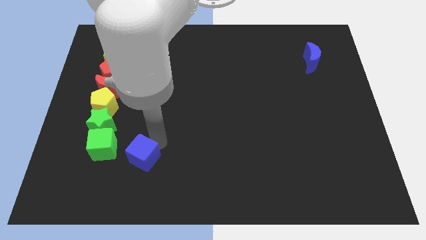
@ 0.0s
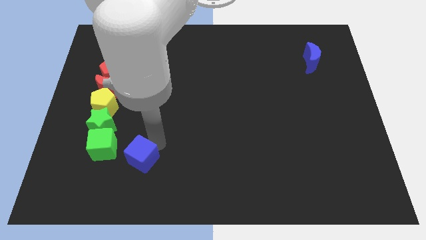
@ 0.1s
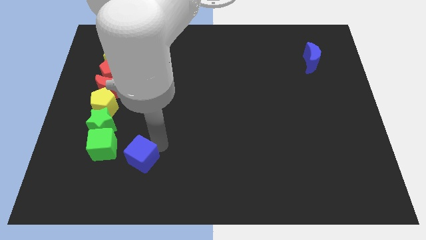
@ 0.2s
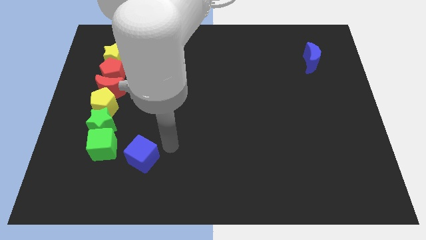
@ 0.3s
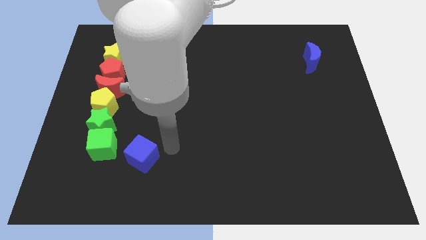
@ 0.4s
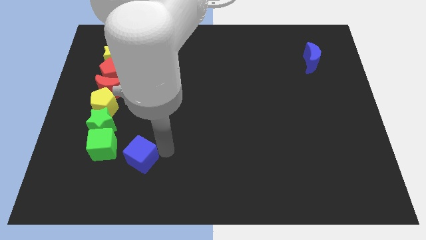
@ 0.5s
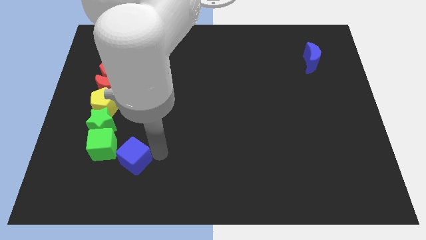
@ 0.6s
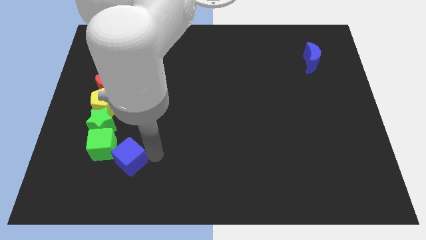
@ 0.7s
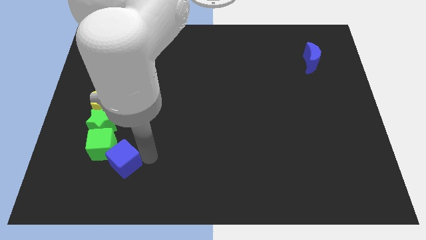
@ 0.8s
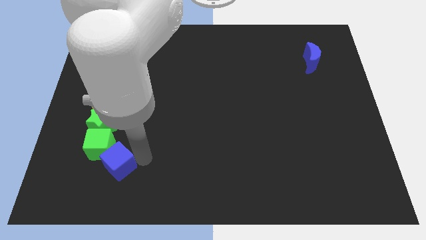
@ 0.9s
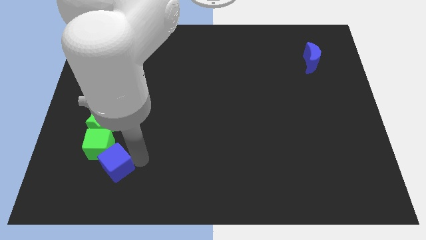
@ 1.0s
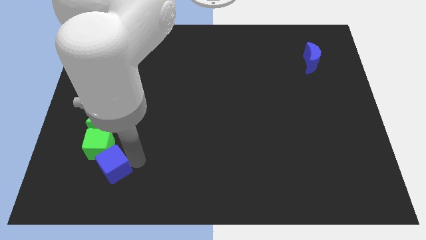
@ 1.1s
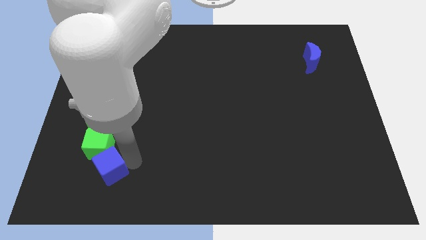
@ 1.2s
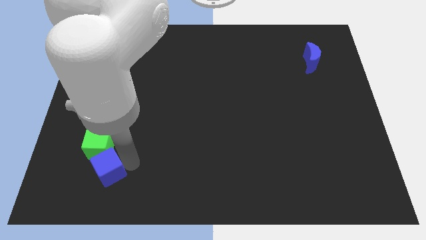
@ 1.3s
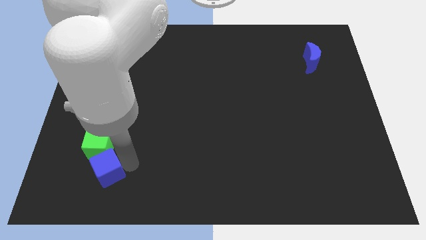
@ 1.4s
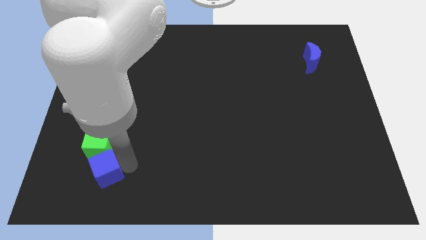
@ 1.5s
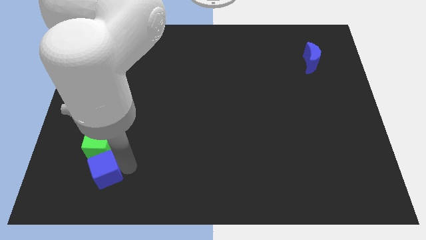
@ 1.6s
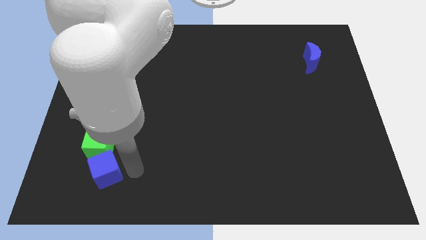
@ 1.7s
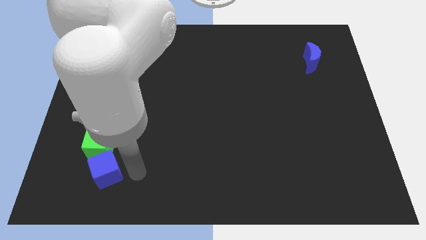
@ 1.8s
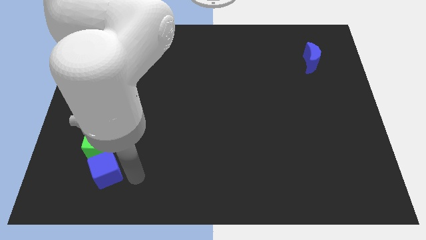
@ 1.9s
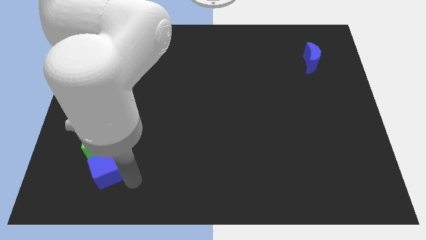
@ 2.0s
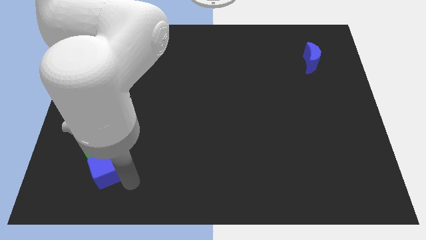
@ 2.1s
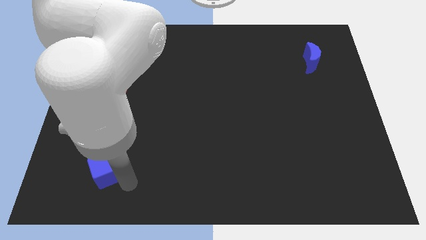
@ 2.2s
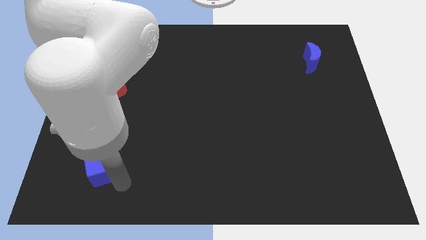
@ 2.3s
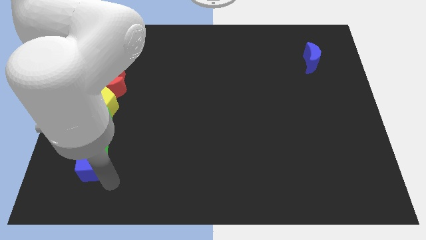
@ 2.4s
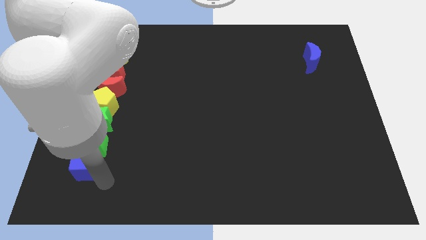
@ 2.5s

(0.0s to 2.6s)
put the blue cube below the green cube

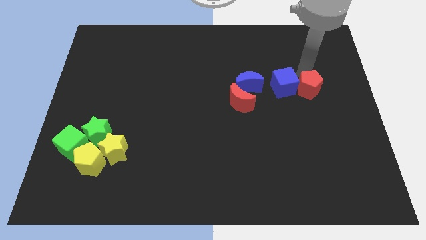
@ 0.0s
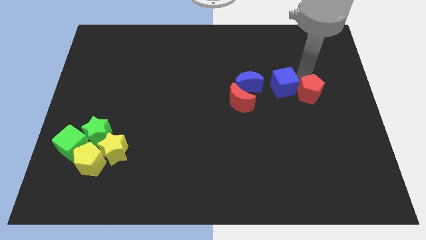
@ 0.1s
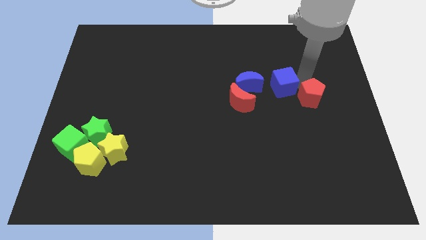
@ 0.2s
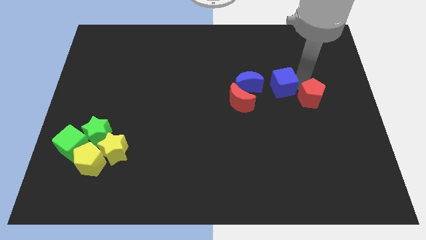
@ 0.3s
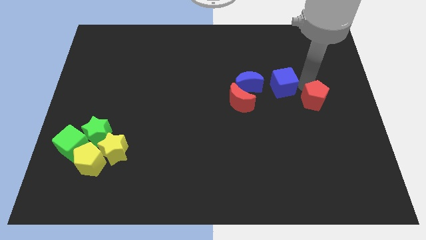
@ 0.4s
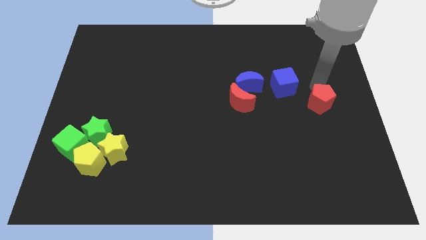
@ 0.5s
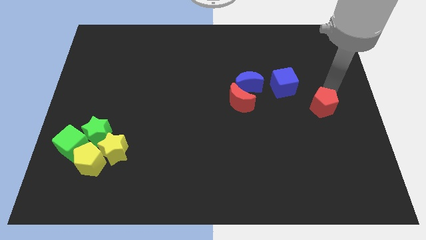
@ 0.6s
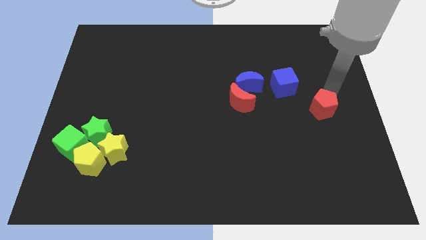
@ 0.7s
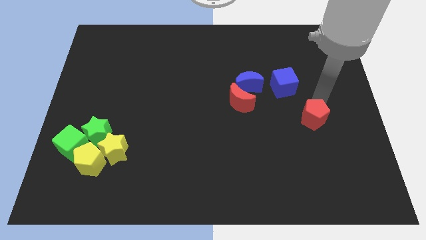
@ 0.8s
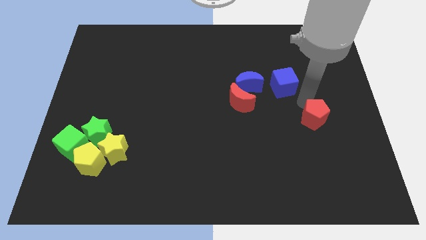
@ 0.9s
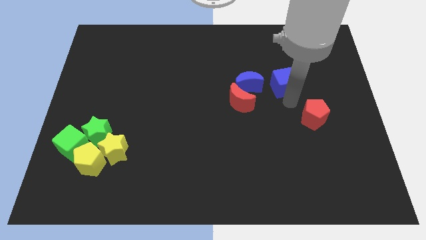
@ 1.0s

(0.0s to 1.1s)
move the red pentagon to the bottom right of the blue cube

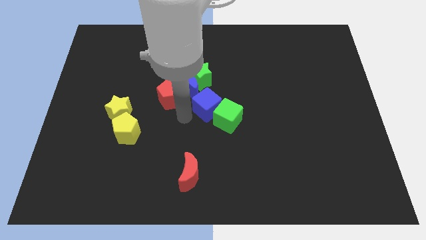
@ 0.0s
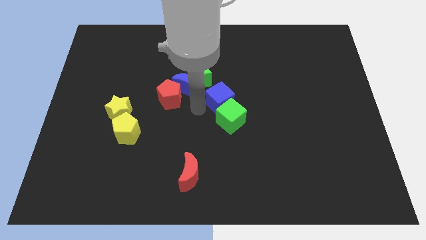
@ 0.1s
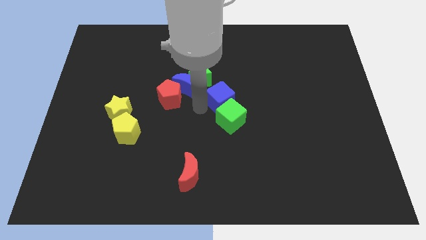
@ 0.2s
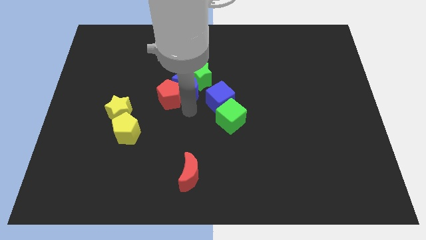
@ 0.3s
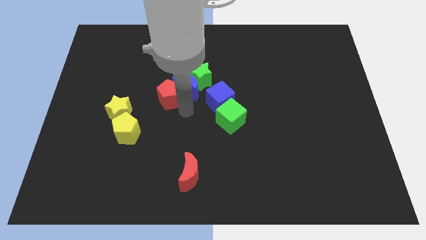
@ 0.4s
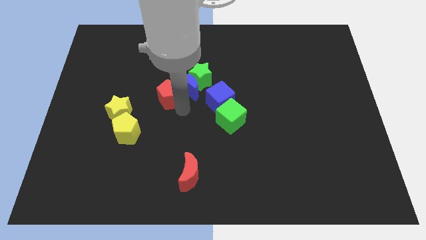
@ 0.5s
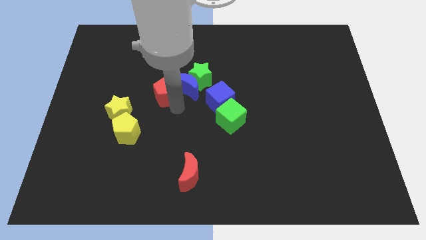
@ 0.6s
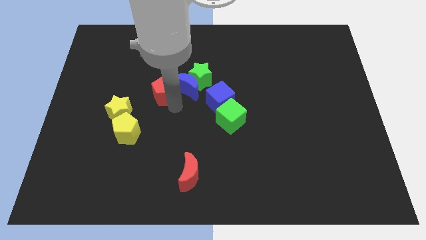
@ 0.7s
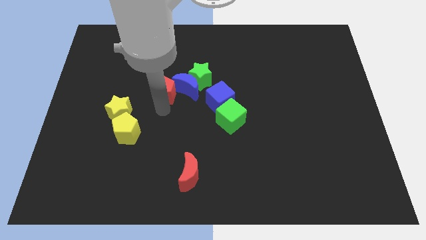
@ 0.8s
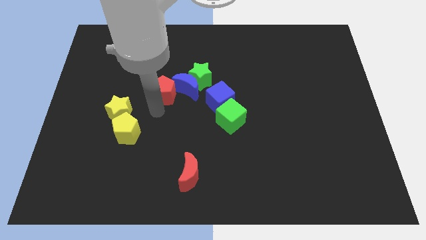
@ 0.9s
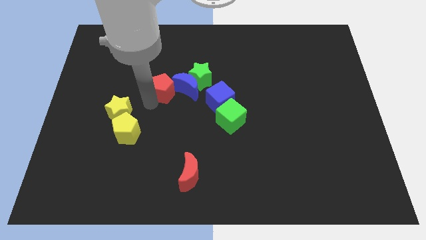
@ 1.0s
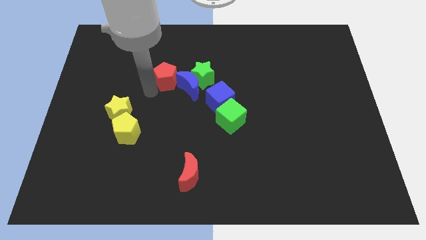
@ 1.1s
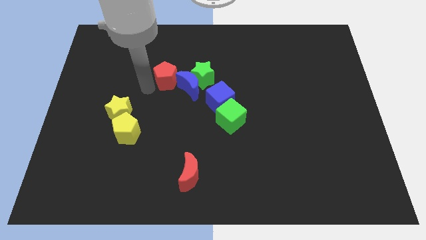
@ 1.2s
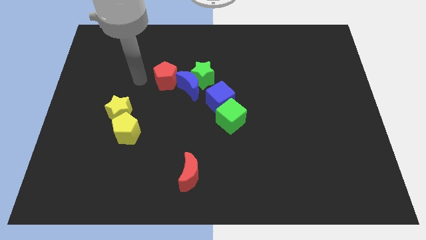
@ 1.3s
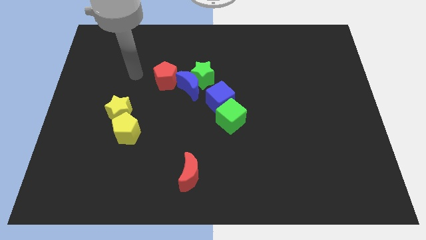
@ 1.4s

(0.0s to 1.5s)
push the red pentagon slightly upwards

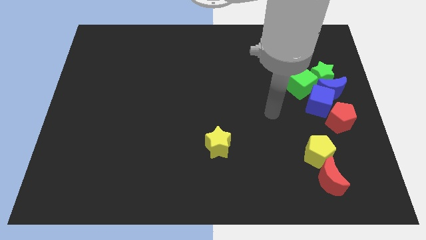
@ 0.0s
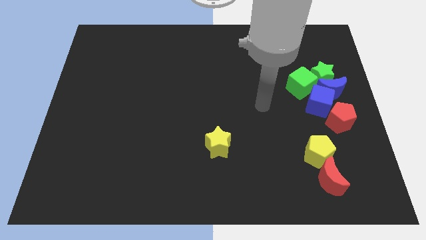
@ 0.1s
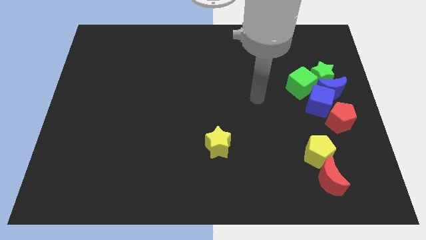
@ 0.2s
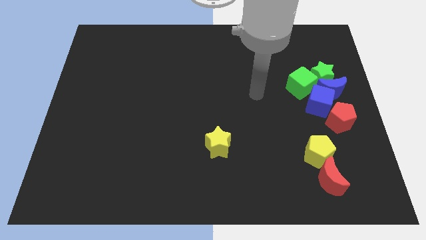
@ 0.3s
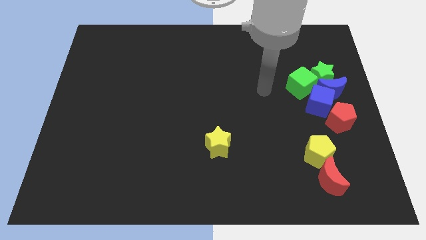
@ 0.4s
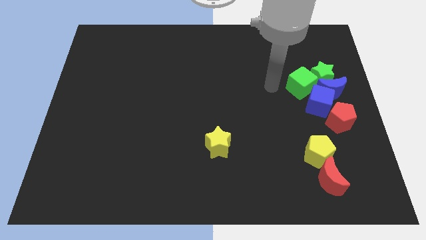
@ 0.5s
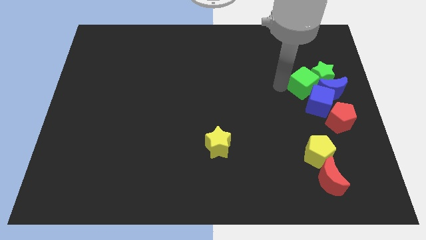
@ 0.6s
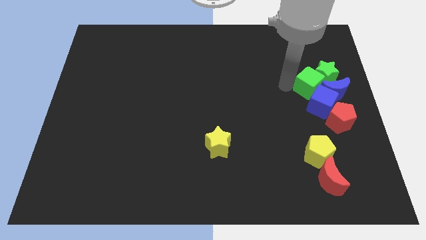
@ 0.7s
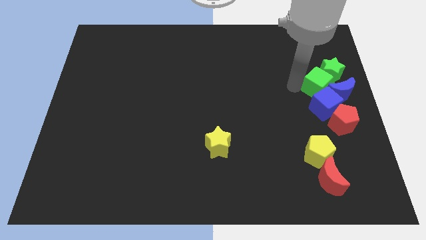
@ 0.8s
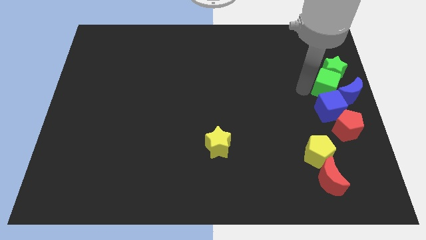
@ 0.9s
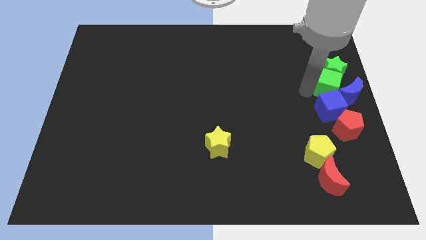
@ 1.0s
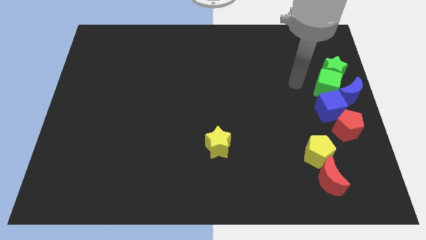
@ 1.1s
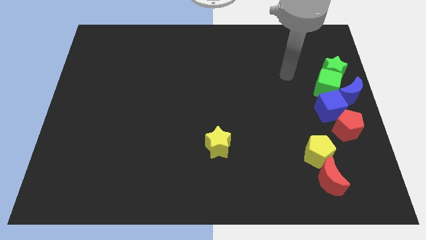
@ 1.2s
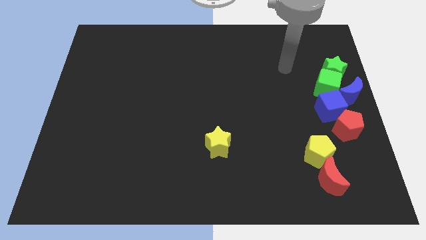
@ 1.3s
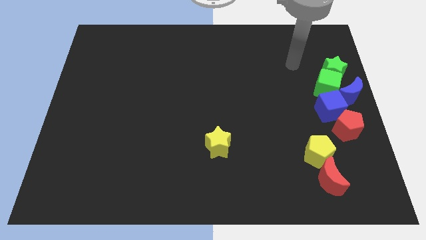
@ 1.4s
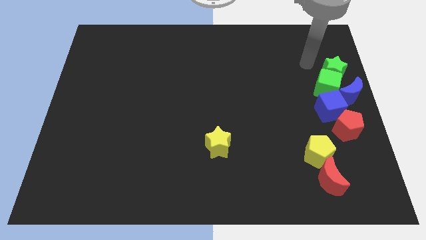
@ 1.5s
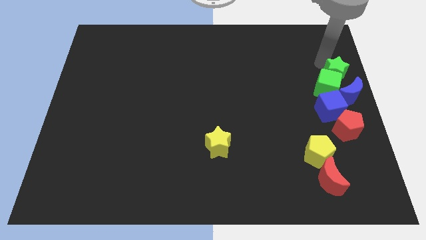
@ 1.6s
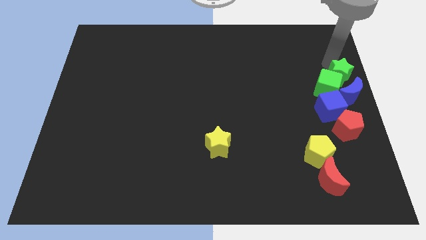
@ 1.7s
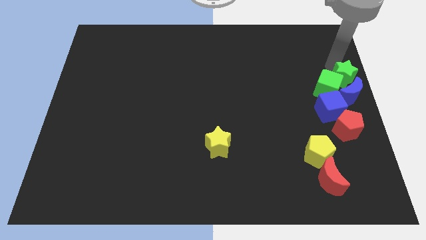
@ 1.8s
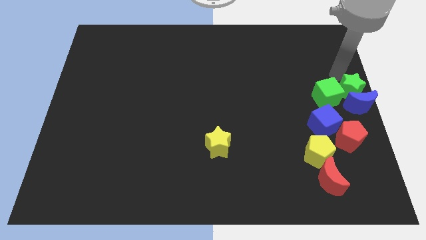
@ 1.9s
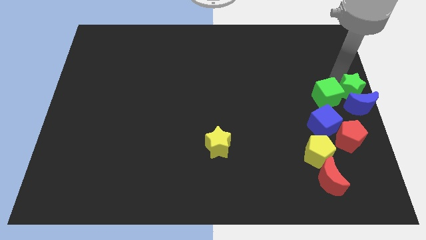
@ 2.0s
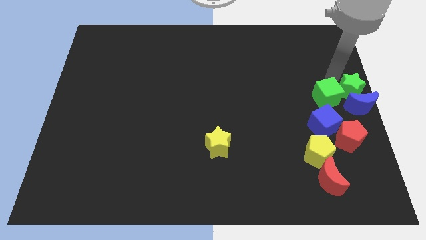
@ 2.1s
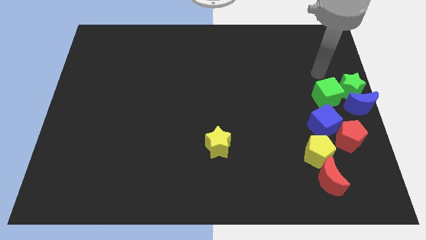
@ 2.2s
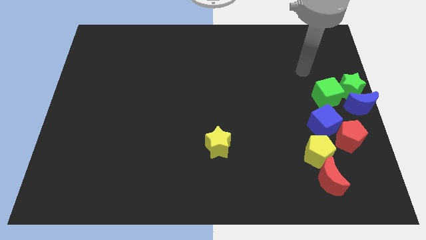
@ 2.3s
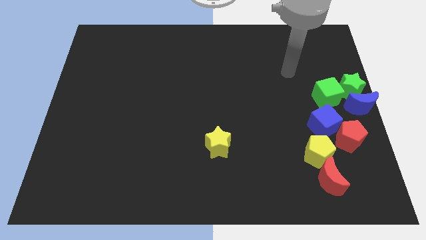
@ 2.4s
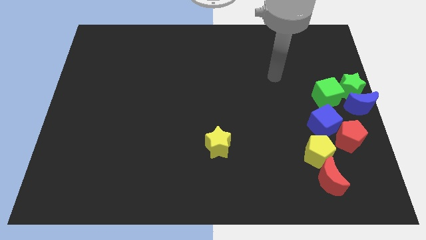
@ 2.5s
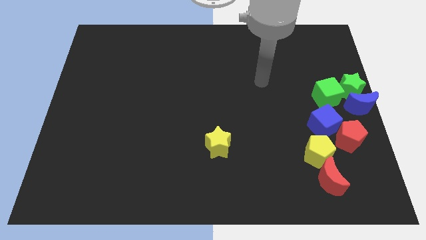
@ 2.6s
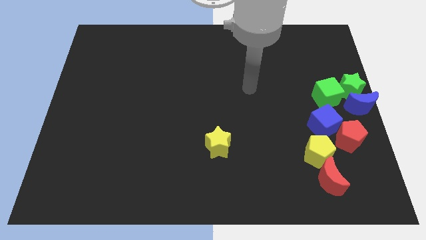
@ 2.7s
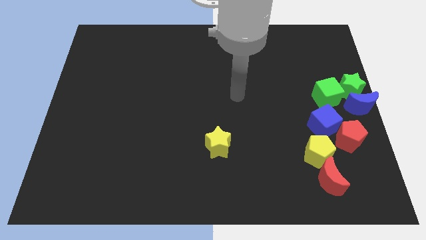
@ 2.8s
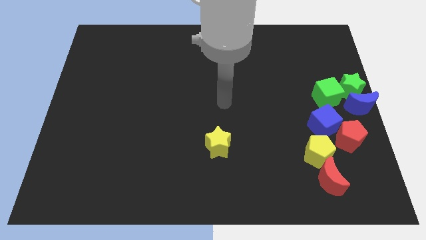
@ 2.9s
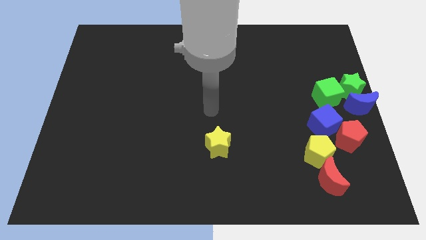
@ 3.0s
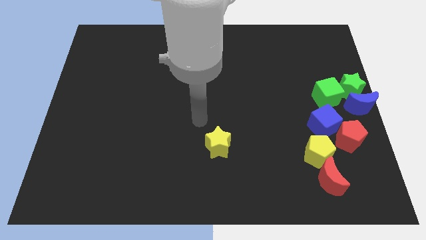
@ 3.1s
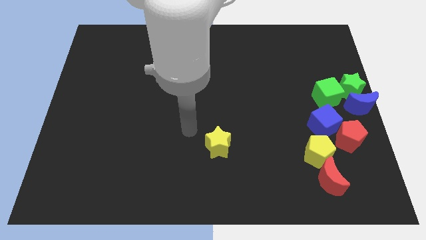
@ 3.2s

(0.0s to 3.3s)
move the green star and green cube towards the center right

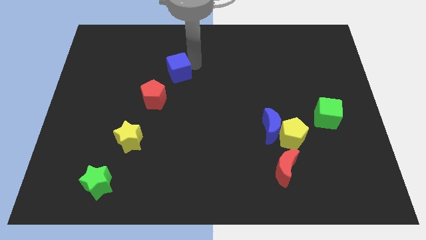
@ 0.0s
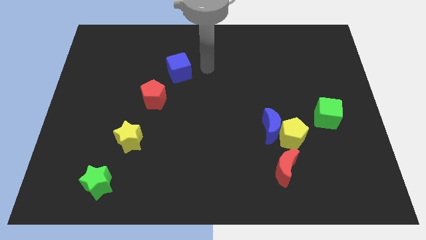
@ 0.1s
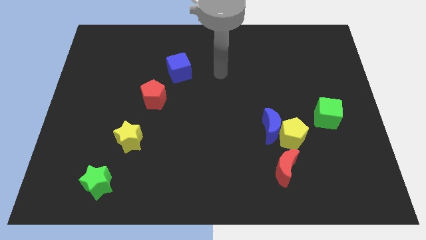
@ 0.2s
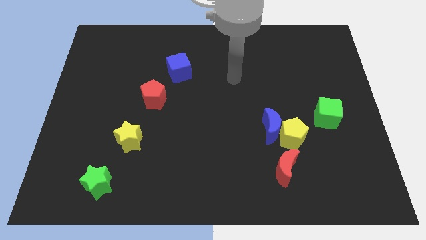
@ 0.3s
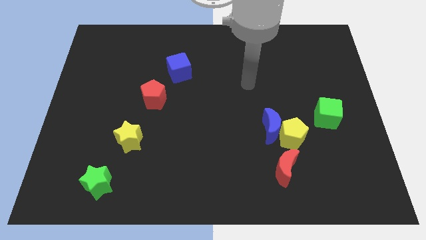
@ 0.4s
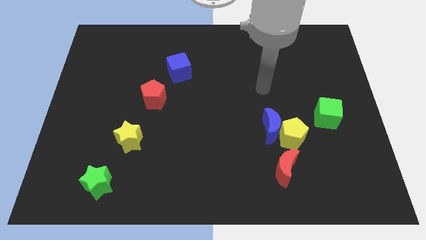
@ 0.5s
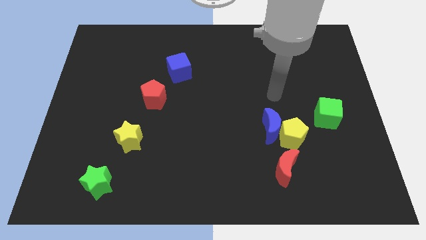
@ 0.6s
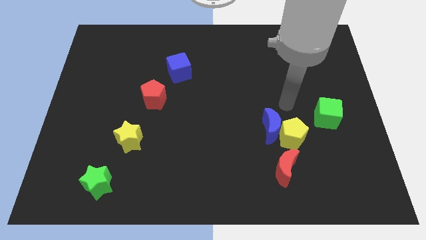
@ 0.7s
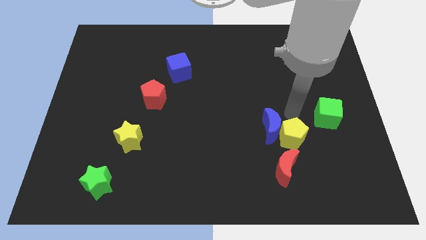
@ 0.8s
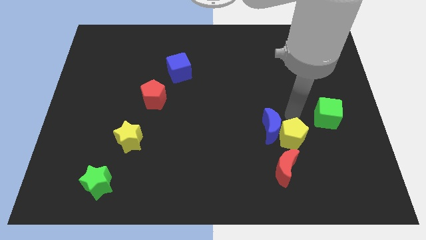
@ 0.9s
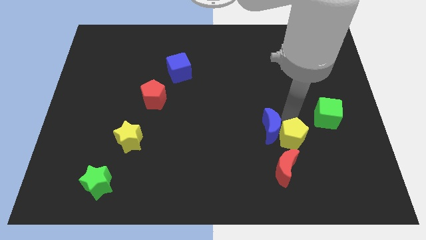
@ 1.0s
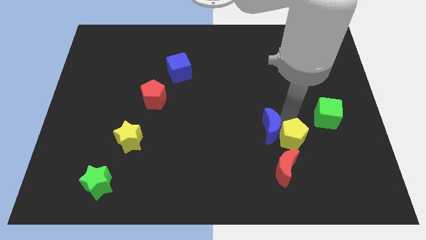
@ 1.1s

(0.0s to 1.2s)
point your arm at the top of the yellow pentagon
